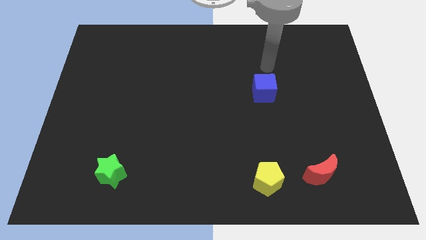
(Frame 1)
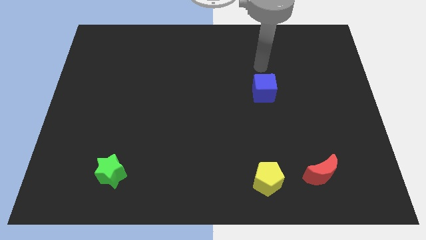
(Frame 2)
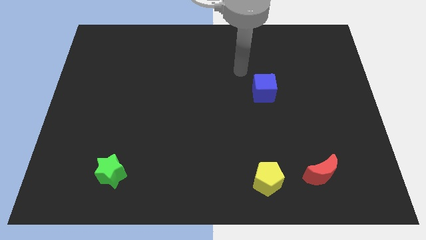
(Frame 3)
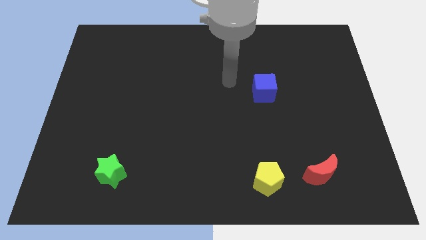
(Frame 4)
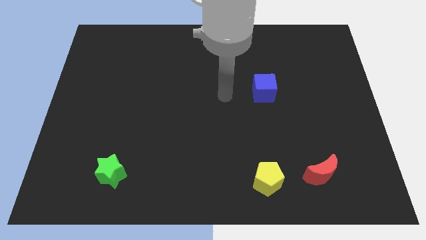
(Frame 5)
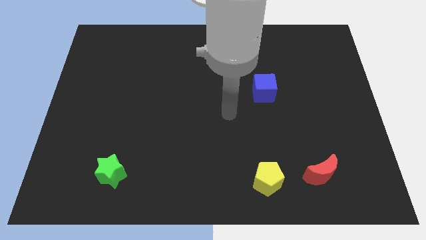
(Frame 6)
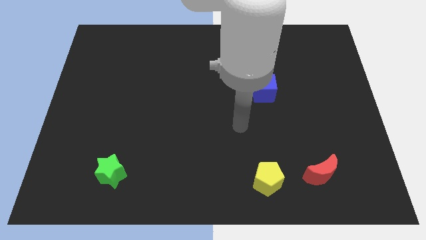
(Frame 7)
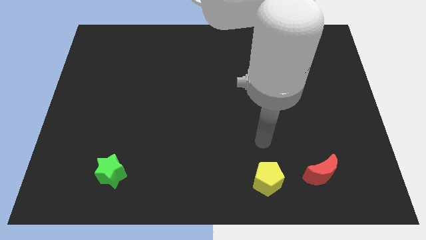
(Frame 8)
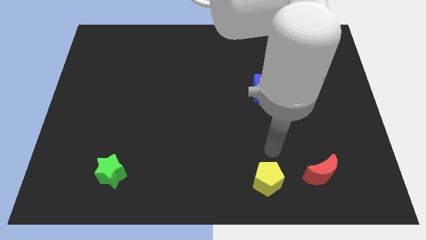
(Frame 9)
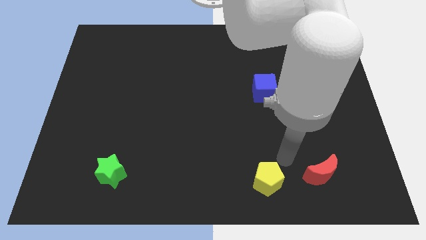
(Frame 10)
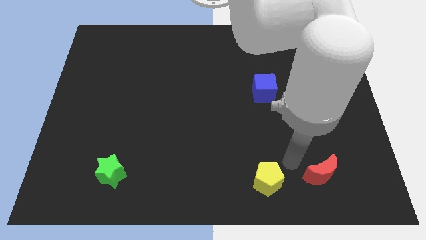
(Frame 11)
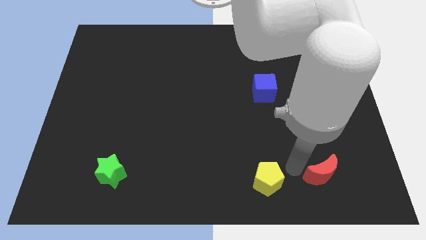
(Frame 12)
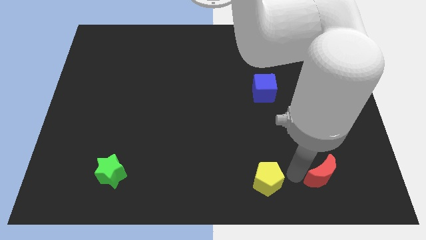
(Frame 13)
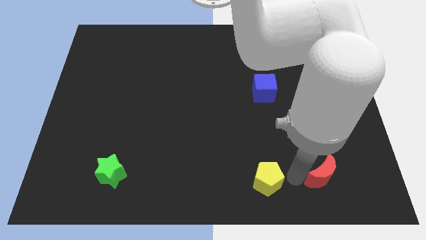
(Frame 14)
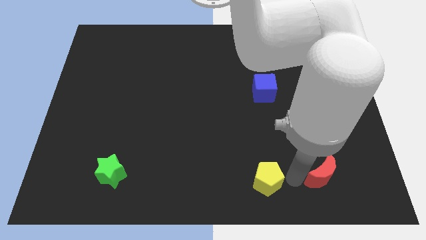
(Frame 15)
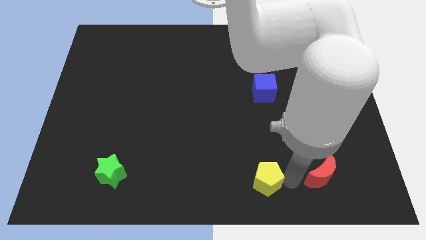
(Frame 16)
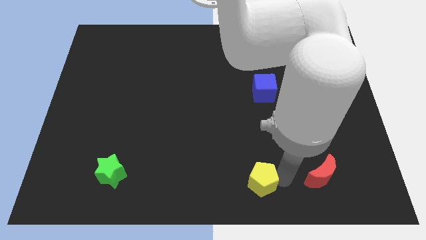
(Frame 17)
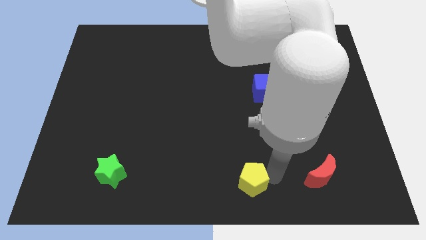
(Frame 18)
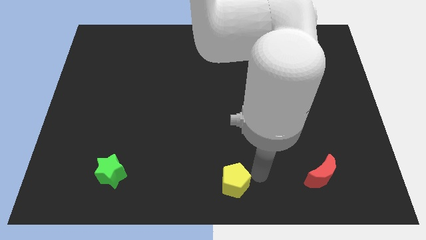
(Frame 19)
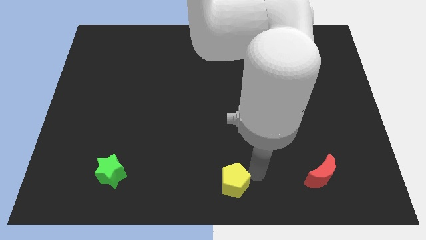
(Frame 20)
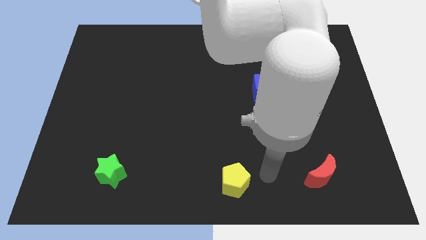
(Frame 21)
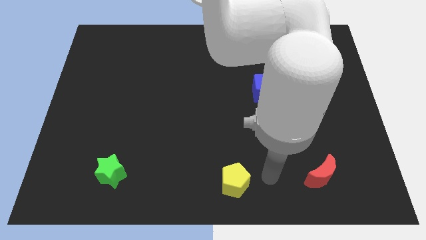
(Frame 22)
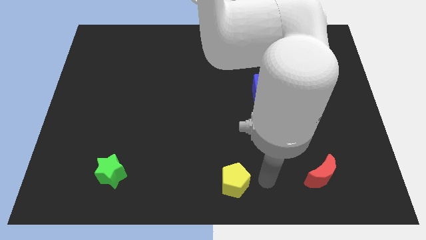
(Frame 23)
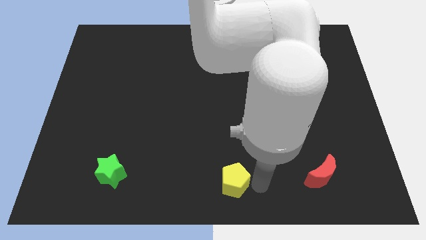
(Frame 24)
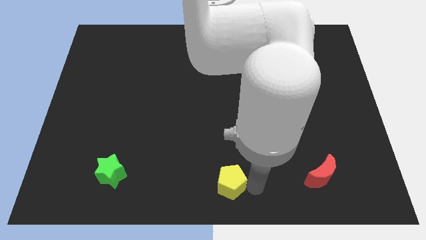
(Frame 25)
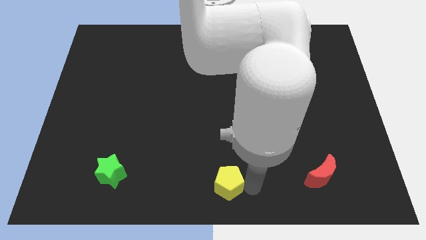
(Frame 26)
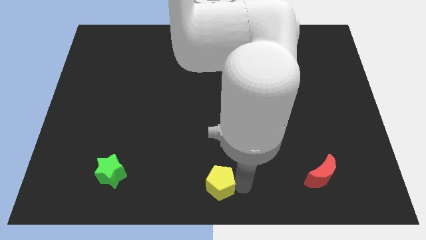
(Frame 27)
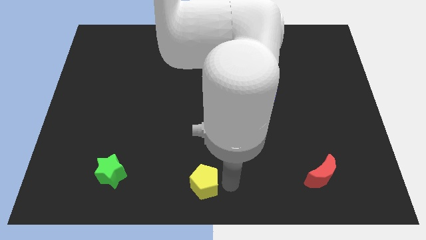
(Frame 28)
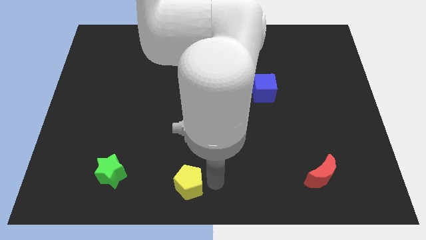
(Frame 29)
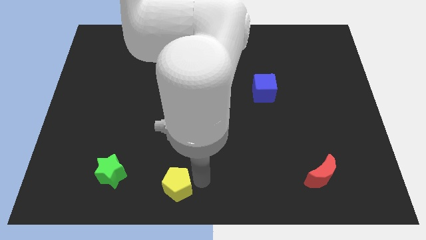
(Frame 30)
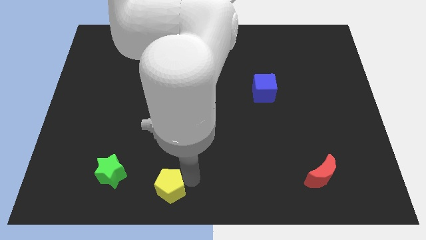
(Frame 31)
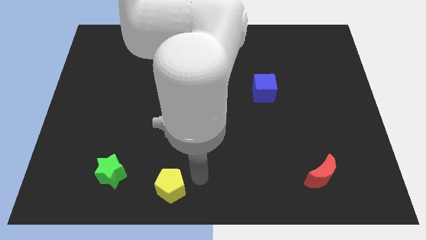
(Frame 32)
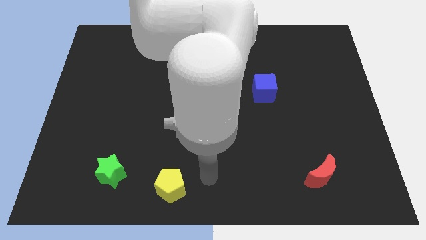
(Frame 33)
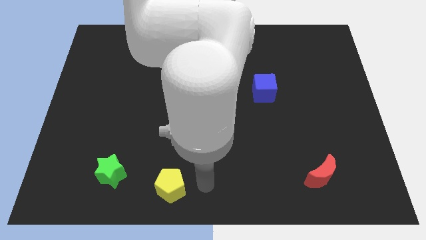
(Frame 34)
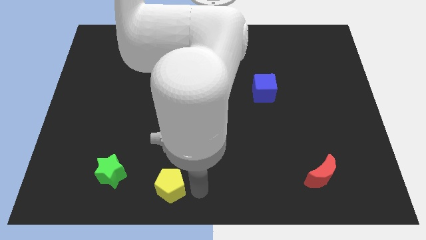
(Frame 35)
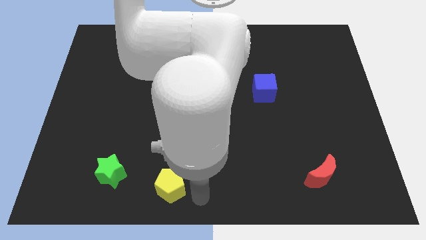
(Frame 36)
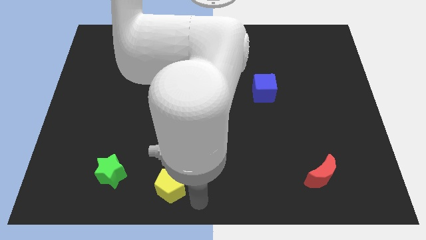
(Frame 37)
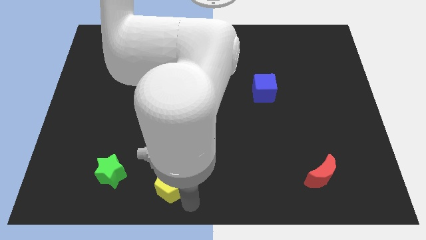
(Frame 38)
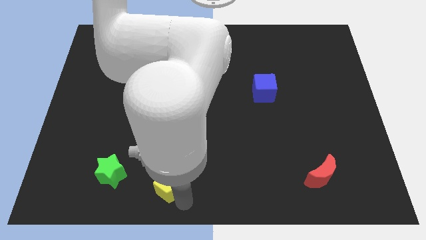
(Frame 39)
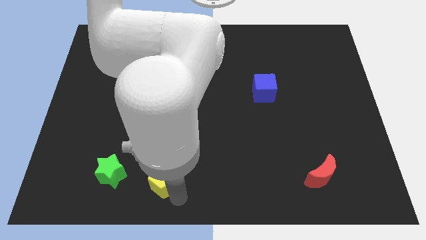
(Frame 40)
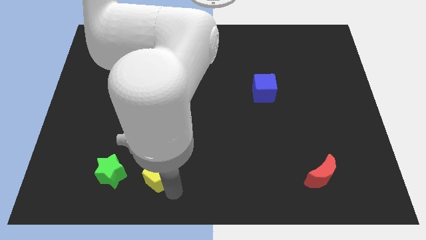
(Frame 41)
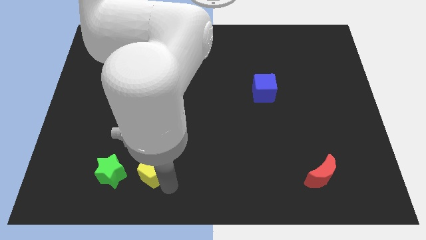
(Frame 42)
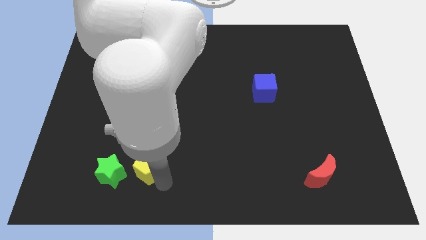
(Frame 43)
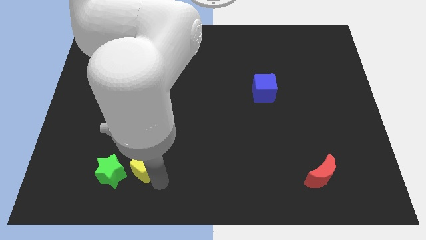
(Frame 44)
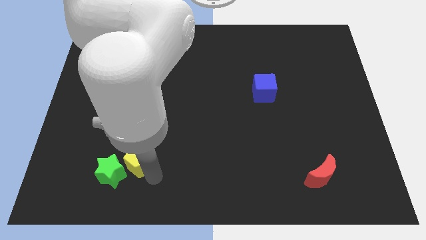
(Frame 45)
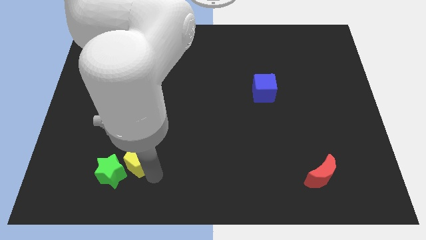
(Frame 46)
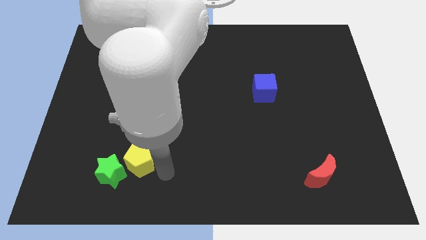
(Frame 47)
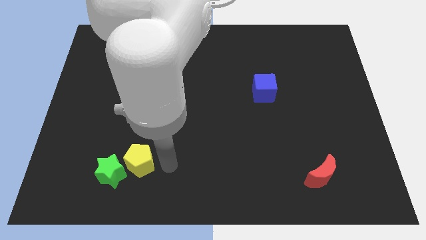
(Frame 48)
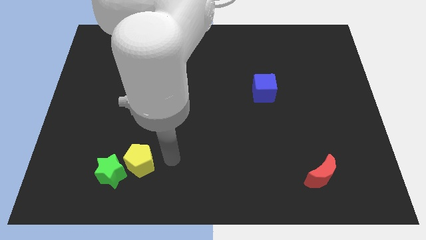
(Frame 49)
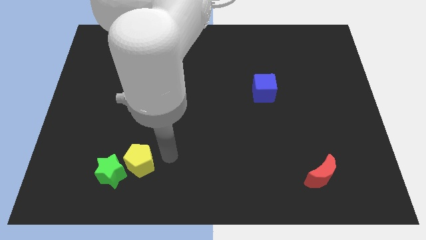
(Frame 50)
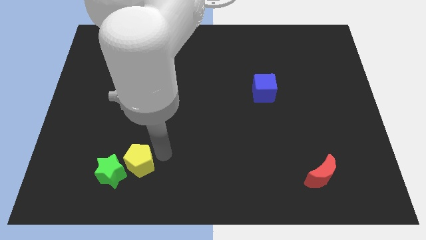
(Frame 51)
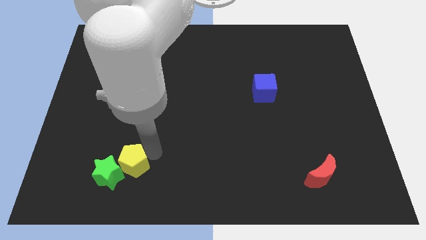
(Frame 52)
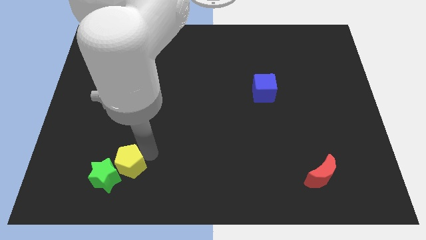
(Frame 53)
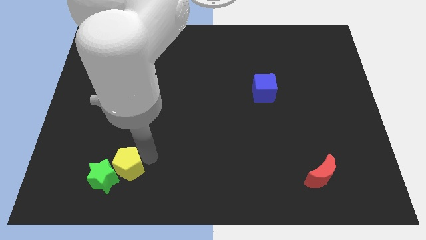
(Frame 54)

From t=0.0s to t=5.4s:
push the pentagon close to the green star

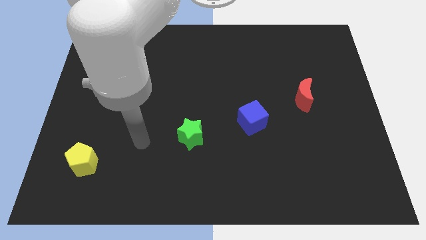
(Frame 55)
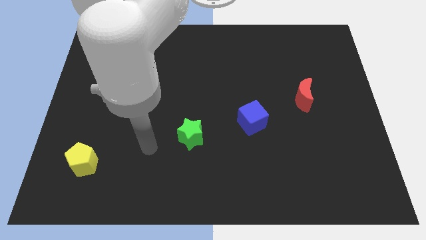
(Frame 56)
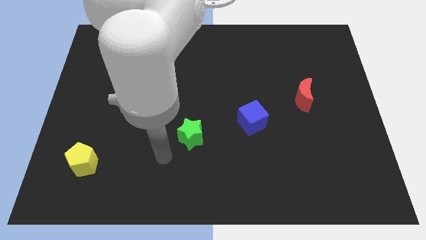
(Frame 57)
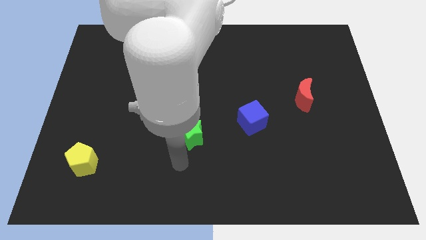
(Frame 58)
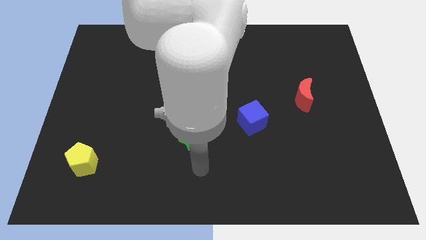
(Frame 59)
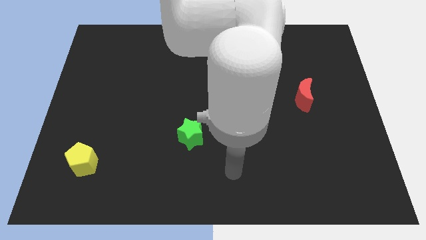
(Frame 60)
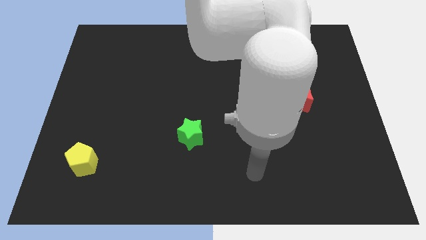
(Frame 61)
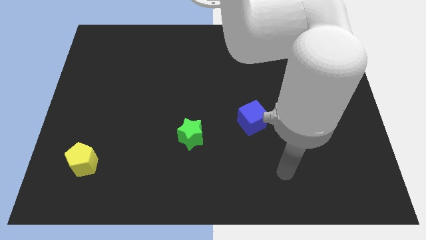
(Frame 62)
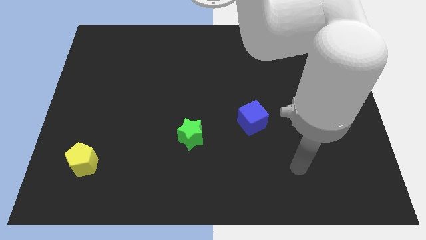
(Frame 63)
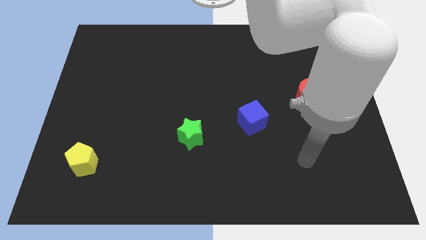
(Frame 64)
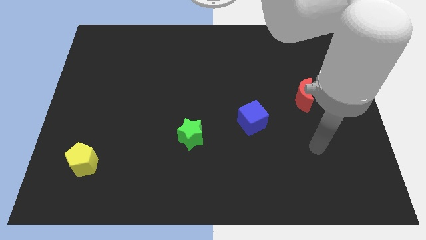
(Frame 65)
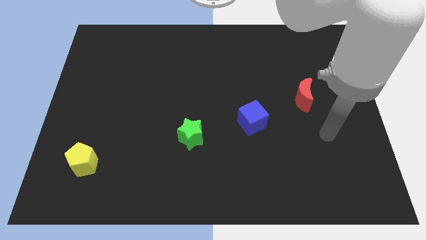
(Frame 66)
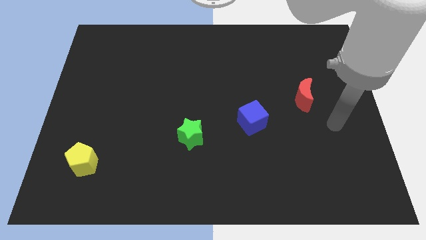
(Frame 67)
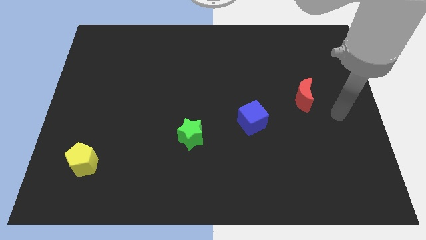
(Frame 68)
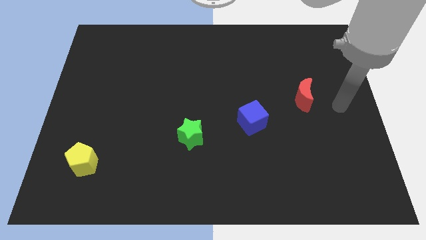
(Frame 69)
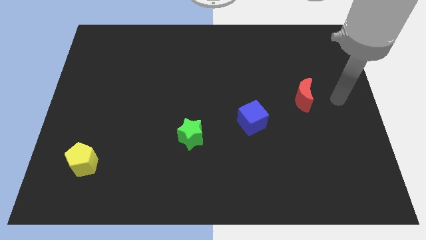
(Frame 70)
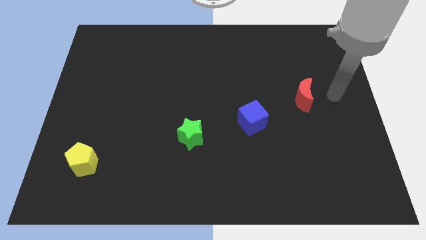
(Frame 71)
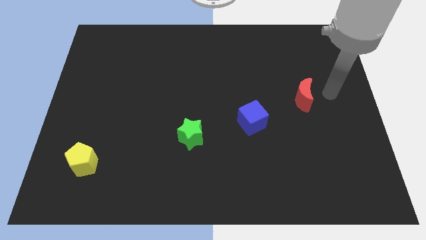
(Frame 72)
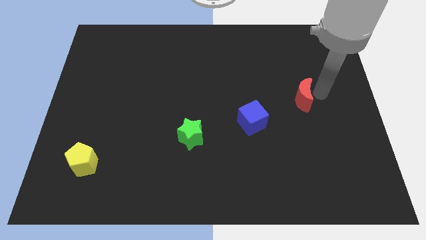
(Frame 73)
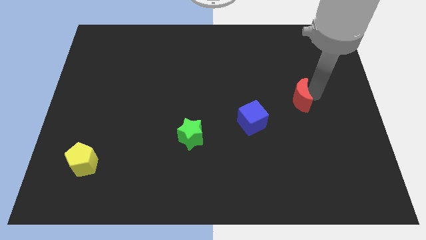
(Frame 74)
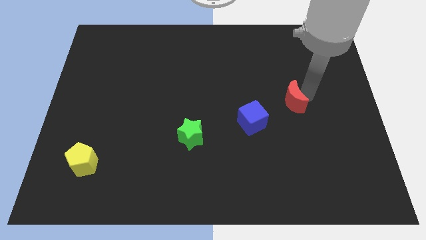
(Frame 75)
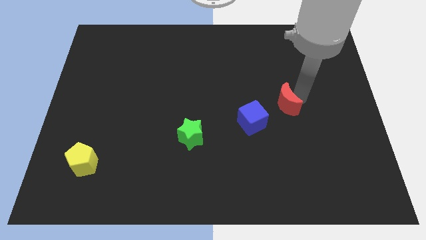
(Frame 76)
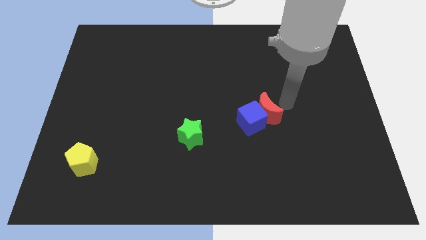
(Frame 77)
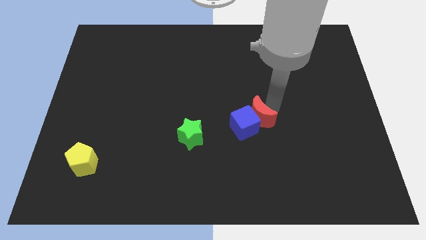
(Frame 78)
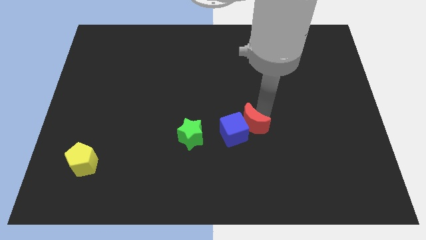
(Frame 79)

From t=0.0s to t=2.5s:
move the red block close to the blue block

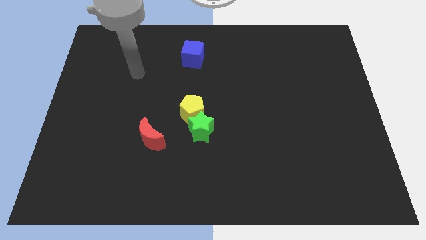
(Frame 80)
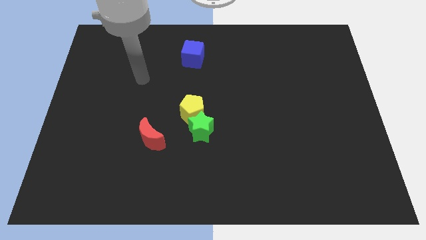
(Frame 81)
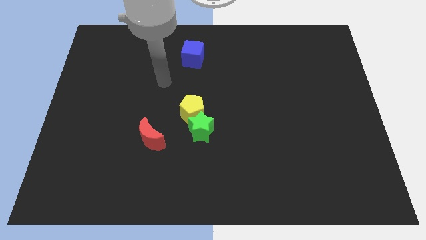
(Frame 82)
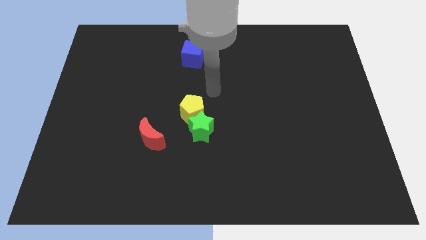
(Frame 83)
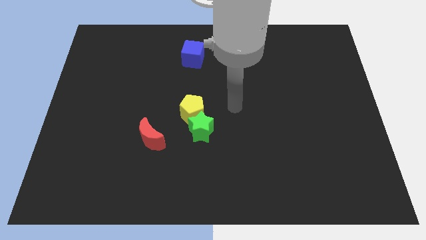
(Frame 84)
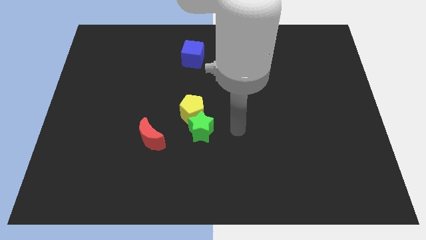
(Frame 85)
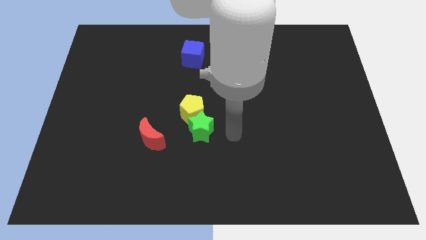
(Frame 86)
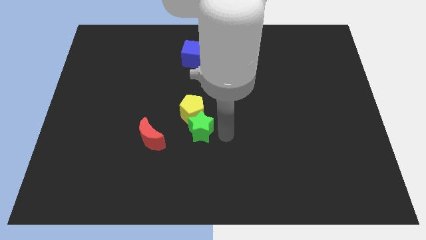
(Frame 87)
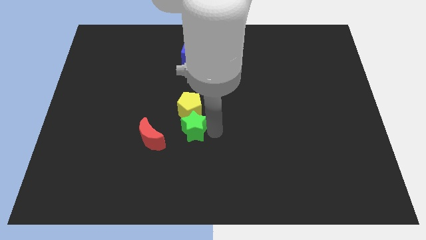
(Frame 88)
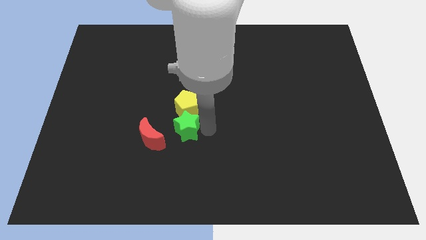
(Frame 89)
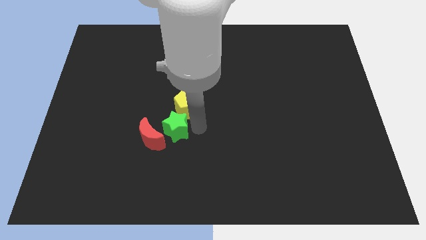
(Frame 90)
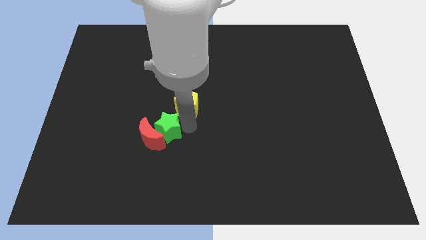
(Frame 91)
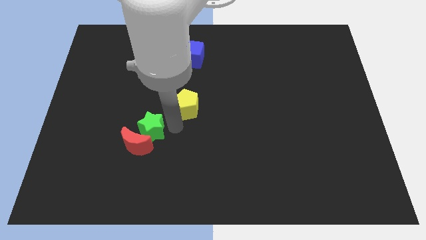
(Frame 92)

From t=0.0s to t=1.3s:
move the green block to the moon
